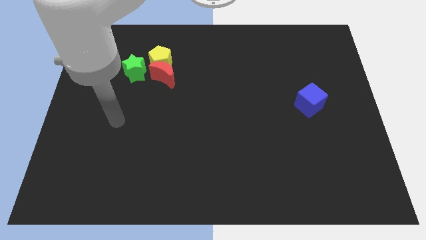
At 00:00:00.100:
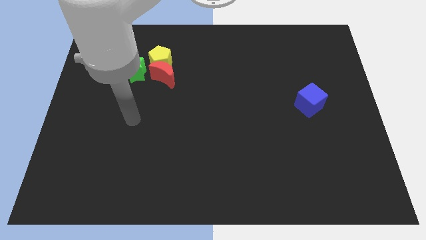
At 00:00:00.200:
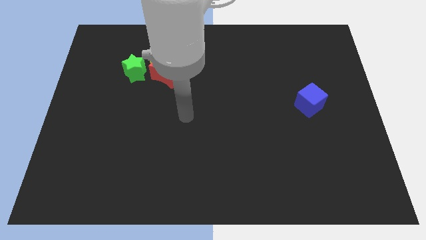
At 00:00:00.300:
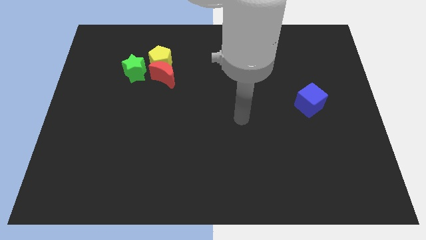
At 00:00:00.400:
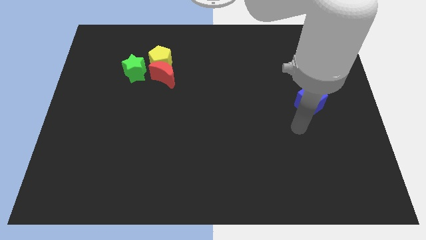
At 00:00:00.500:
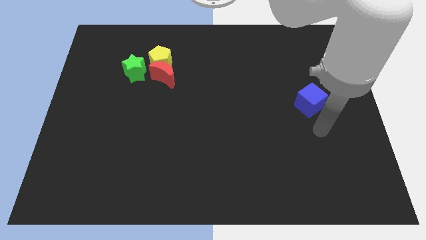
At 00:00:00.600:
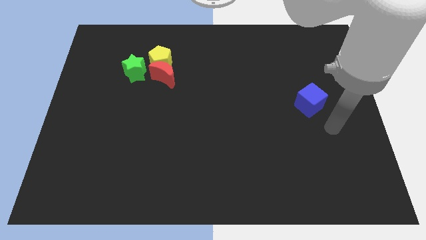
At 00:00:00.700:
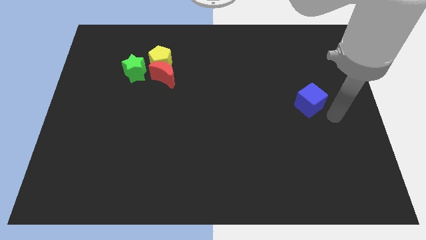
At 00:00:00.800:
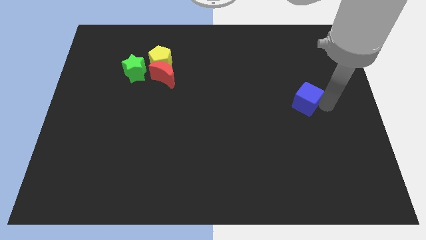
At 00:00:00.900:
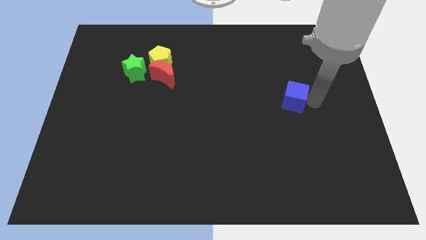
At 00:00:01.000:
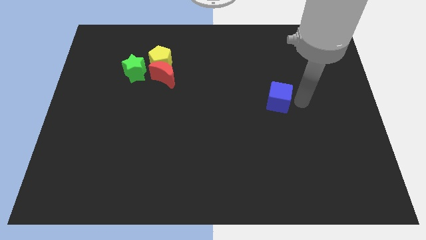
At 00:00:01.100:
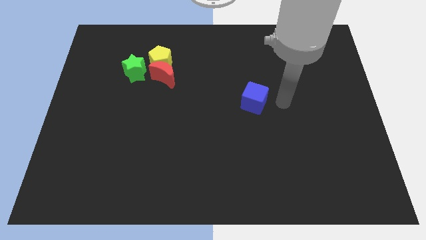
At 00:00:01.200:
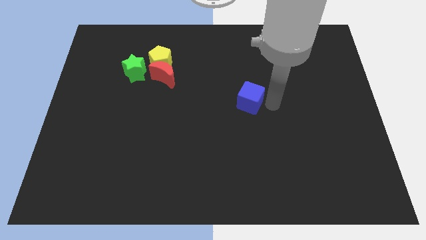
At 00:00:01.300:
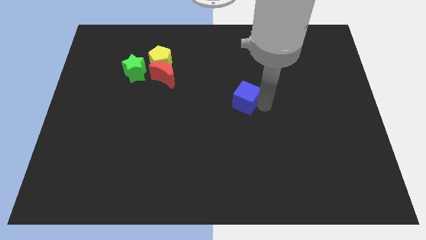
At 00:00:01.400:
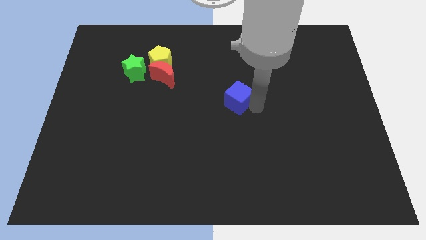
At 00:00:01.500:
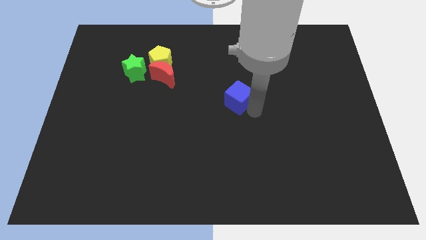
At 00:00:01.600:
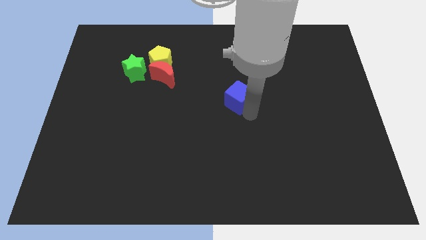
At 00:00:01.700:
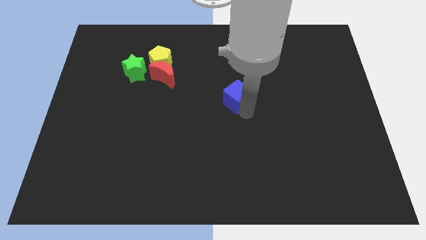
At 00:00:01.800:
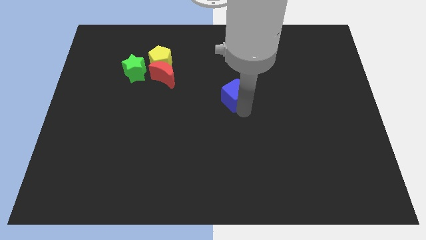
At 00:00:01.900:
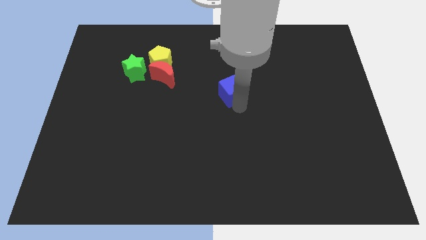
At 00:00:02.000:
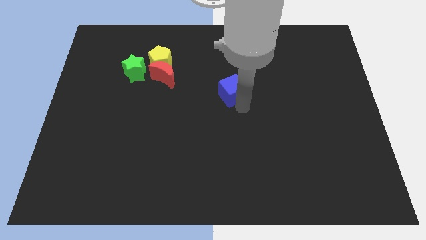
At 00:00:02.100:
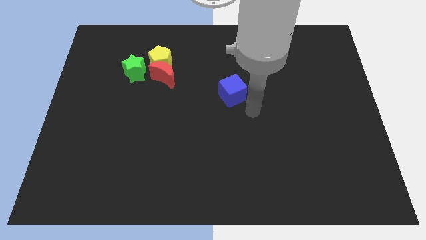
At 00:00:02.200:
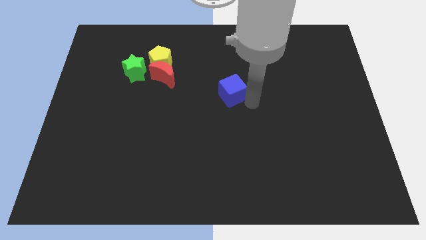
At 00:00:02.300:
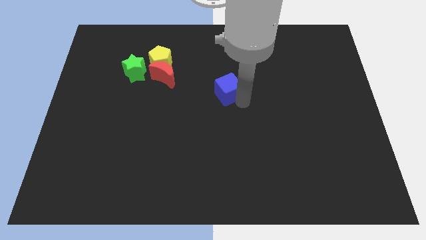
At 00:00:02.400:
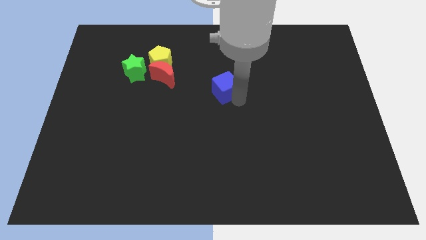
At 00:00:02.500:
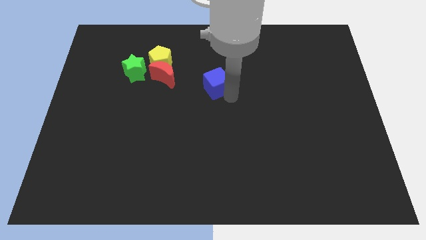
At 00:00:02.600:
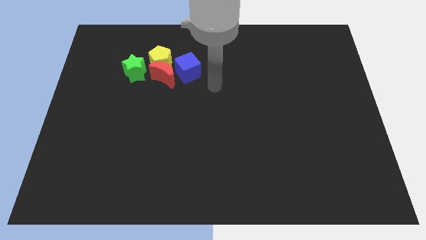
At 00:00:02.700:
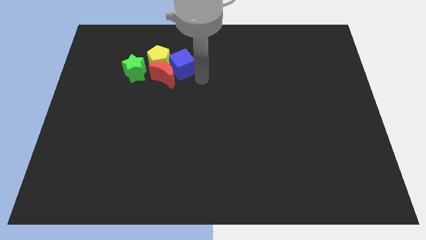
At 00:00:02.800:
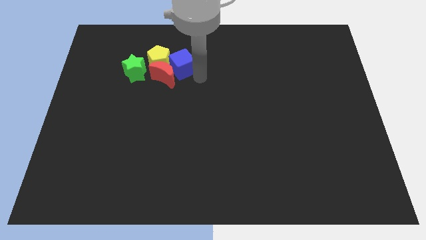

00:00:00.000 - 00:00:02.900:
put the cube next to the red moon

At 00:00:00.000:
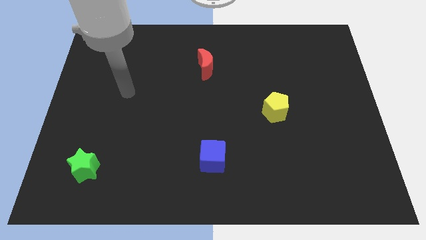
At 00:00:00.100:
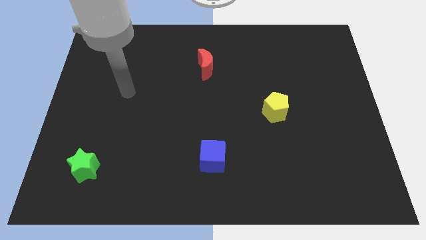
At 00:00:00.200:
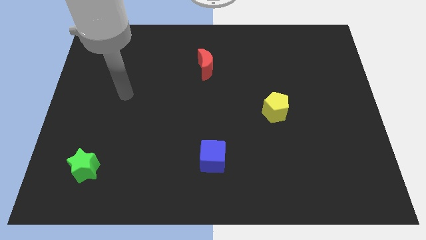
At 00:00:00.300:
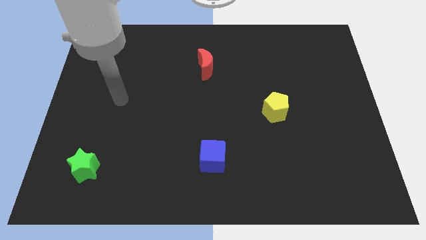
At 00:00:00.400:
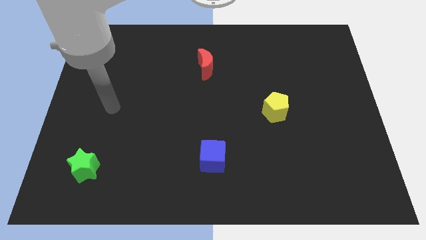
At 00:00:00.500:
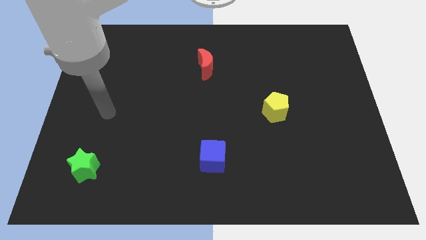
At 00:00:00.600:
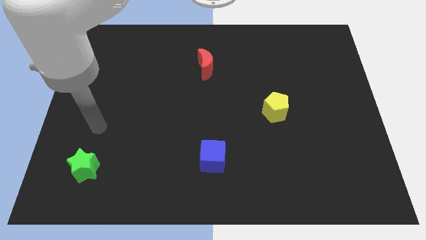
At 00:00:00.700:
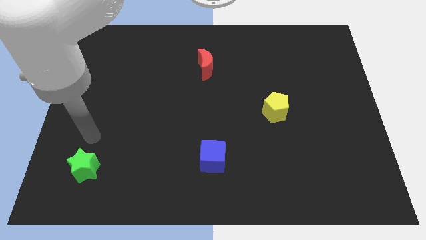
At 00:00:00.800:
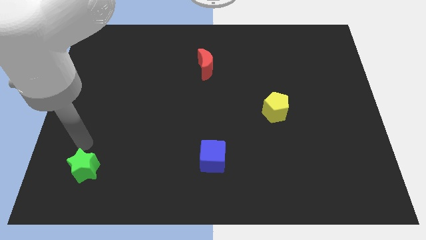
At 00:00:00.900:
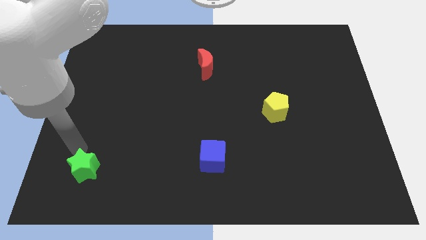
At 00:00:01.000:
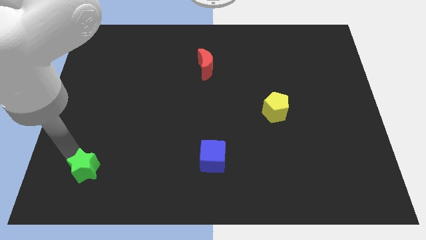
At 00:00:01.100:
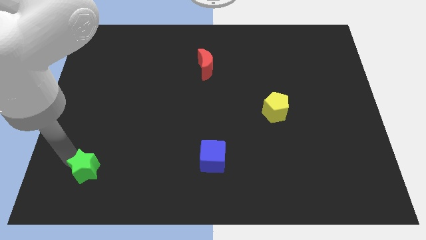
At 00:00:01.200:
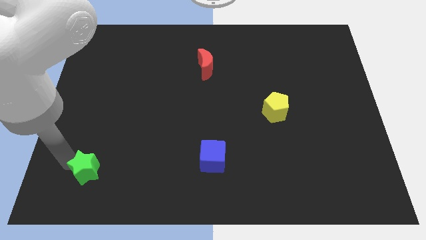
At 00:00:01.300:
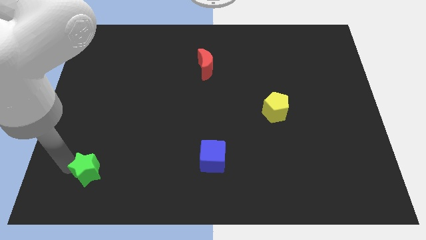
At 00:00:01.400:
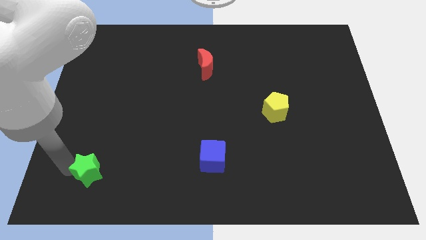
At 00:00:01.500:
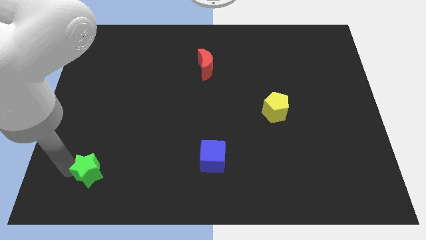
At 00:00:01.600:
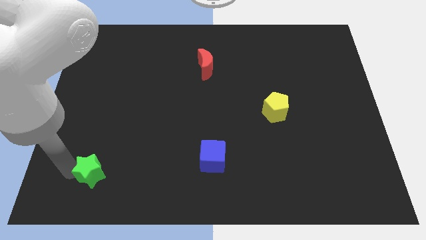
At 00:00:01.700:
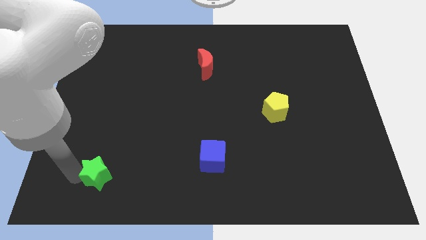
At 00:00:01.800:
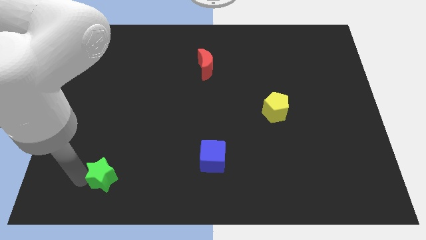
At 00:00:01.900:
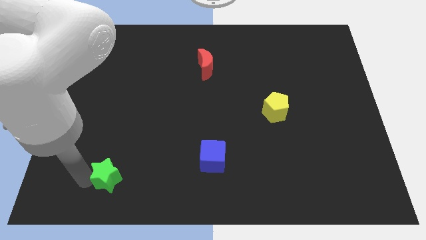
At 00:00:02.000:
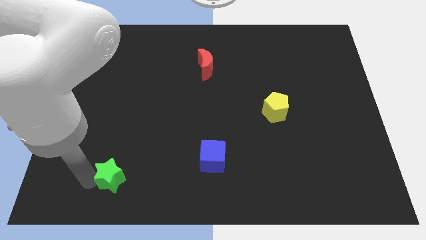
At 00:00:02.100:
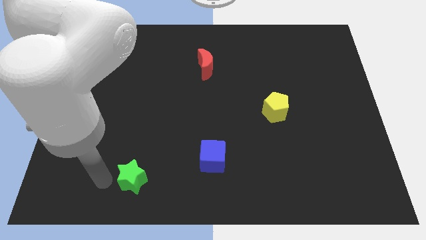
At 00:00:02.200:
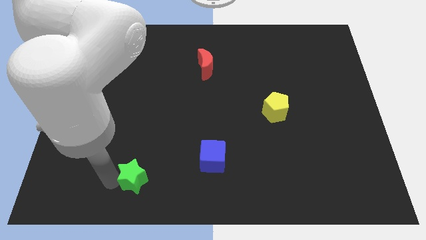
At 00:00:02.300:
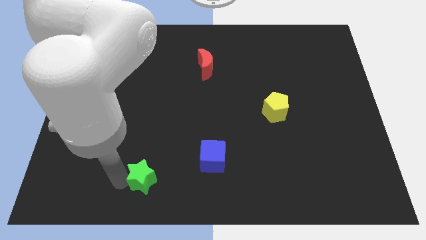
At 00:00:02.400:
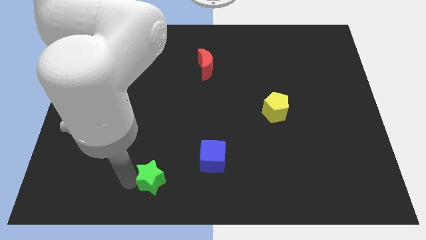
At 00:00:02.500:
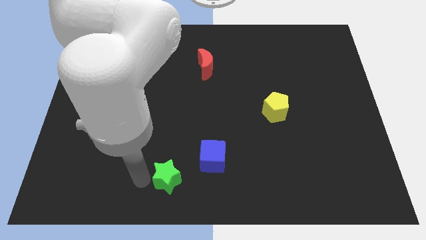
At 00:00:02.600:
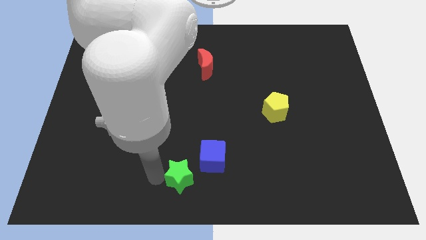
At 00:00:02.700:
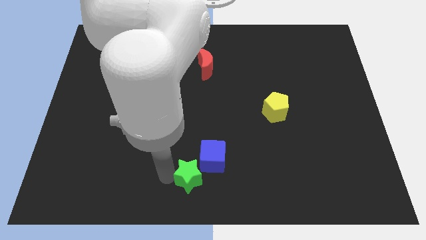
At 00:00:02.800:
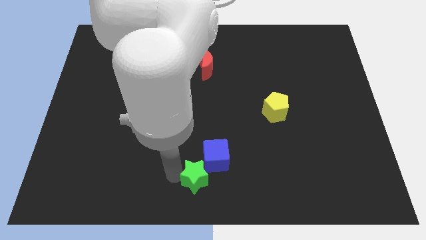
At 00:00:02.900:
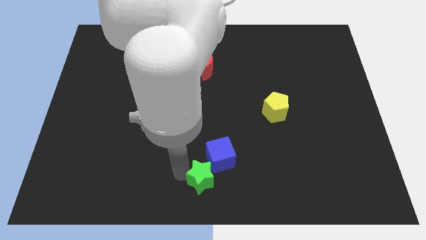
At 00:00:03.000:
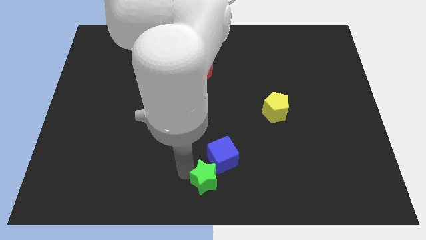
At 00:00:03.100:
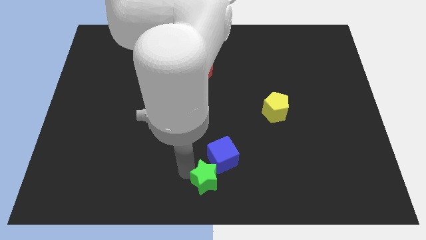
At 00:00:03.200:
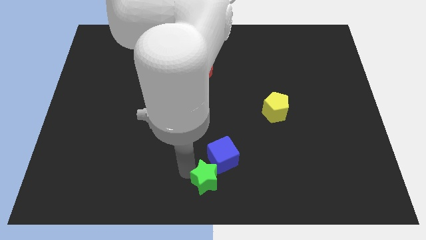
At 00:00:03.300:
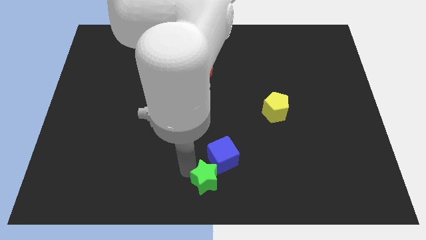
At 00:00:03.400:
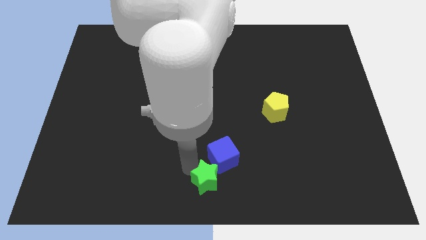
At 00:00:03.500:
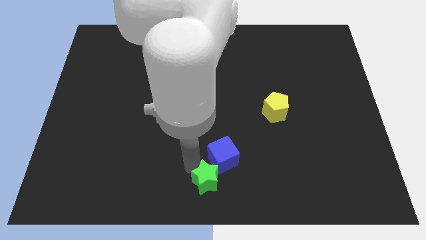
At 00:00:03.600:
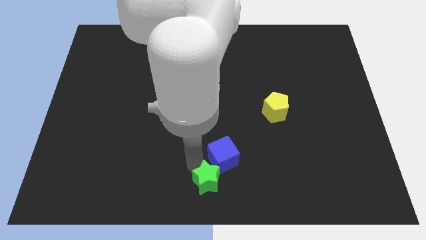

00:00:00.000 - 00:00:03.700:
push the green block close to the blue cube

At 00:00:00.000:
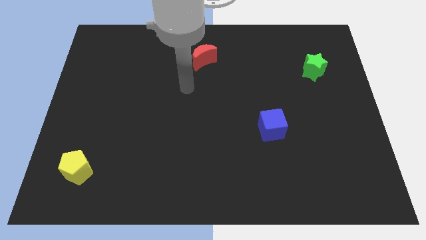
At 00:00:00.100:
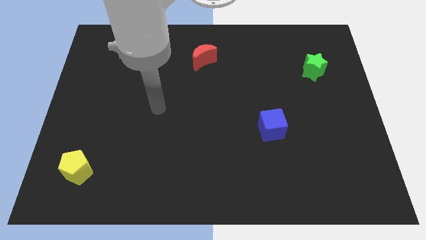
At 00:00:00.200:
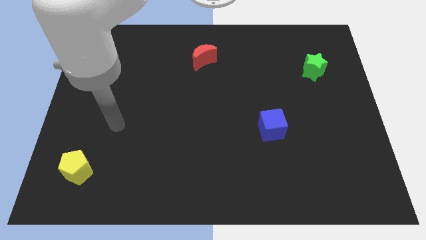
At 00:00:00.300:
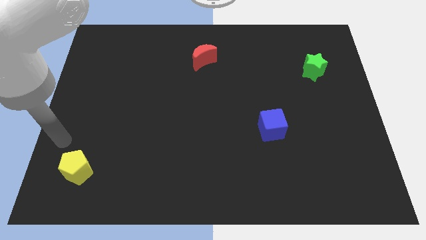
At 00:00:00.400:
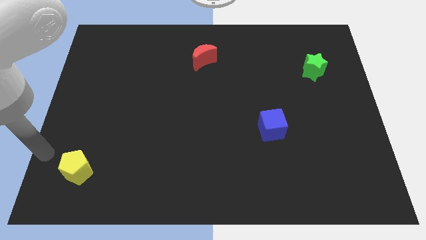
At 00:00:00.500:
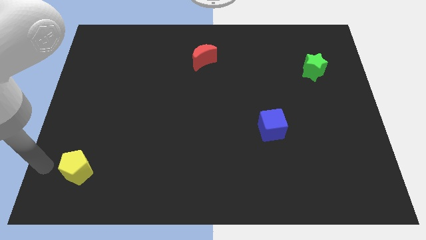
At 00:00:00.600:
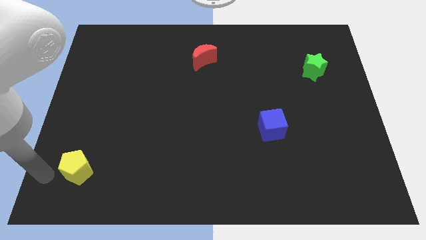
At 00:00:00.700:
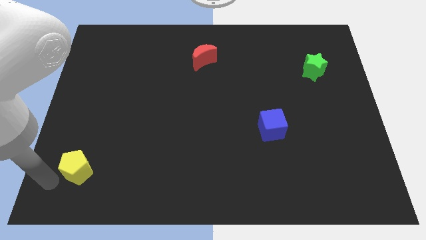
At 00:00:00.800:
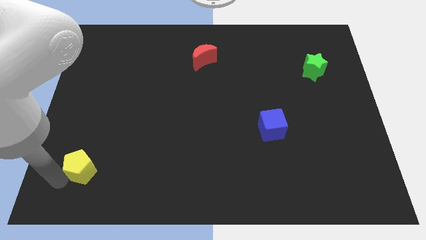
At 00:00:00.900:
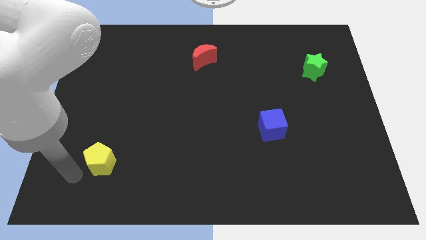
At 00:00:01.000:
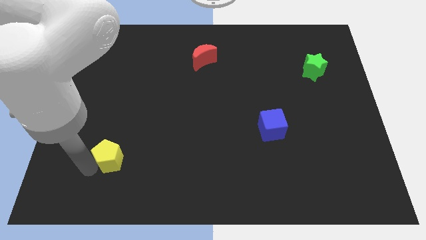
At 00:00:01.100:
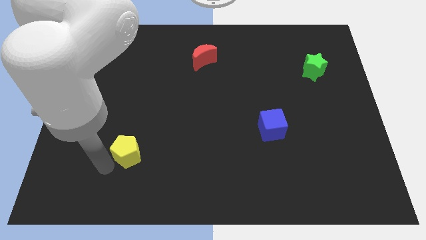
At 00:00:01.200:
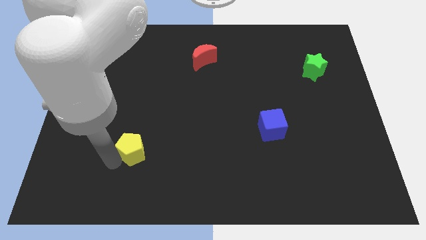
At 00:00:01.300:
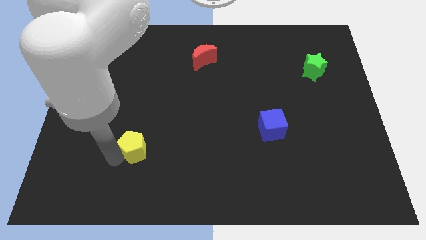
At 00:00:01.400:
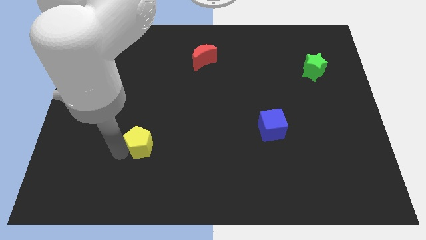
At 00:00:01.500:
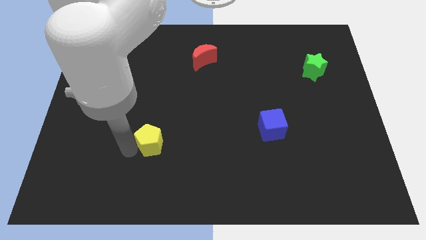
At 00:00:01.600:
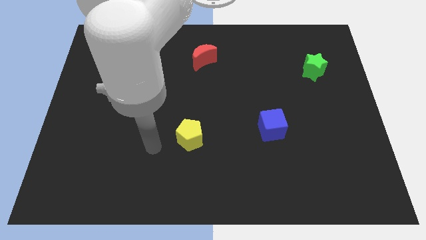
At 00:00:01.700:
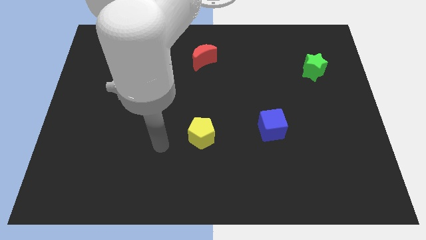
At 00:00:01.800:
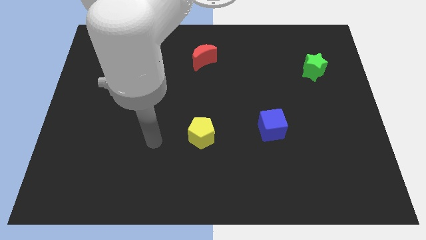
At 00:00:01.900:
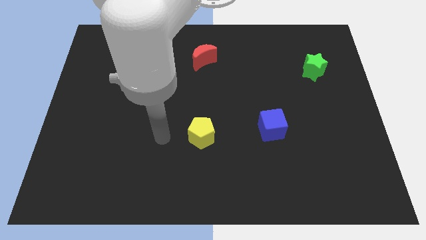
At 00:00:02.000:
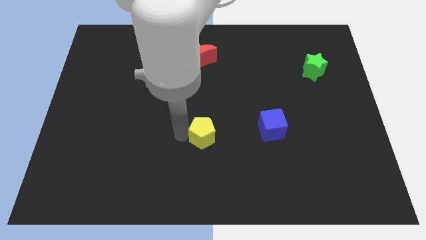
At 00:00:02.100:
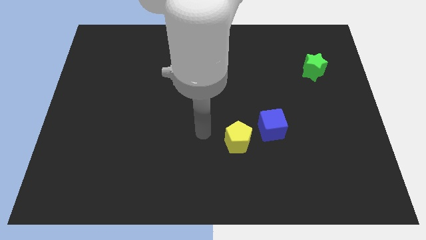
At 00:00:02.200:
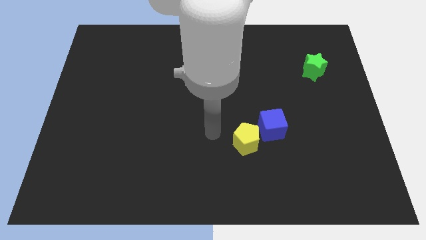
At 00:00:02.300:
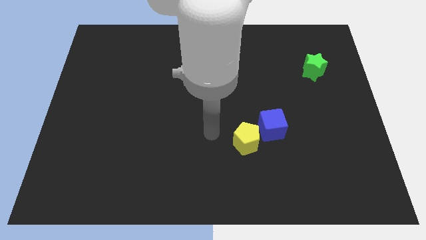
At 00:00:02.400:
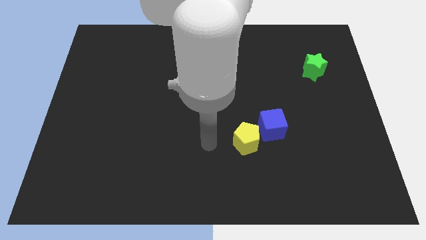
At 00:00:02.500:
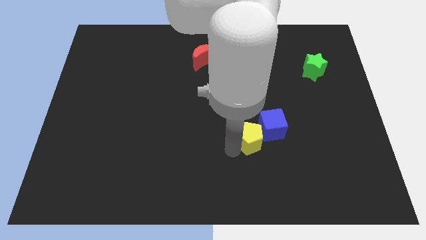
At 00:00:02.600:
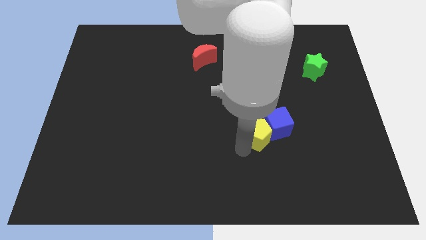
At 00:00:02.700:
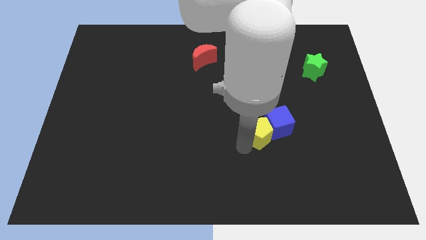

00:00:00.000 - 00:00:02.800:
move the pentagon next to the cube
